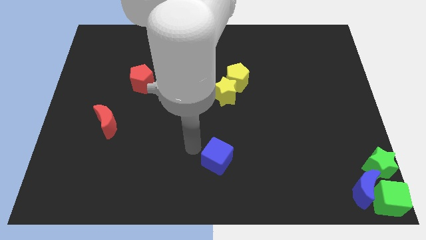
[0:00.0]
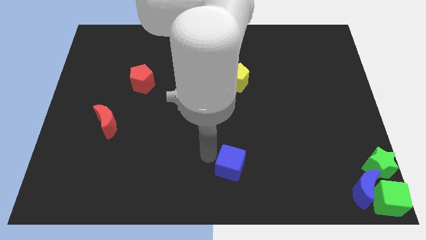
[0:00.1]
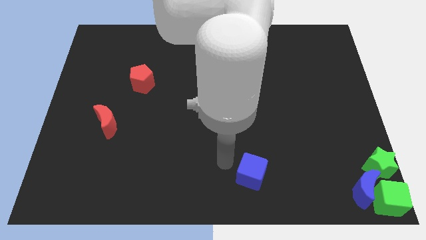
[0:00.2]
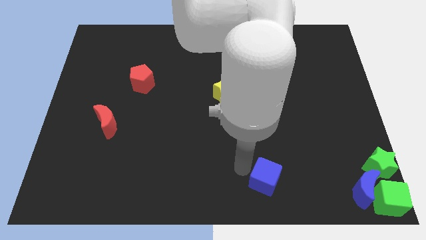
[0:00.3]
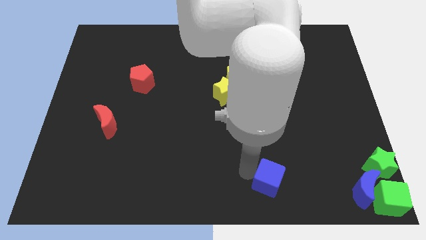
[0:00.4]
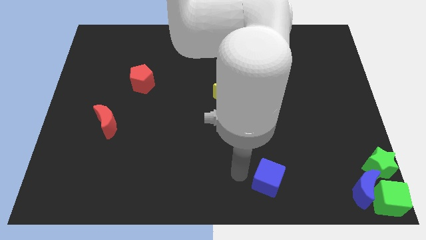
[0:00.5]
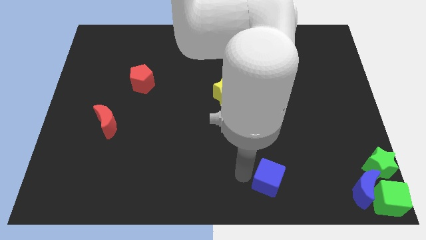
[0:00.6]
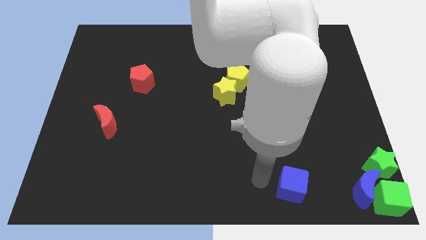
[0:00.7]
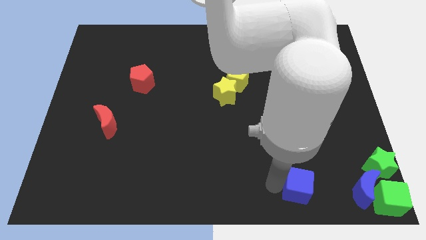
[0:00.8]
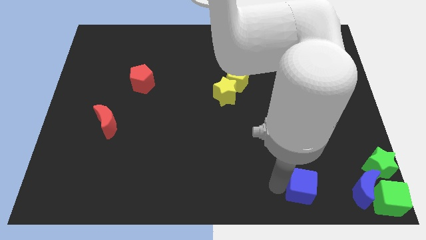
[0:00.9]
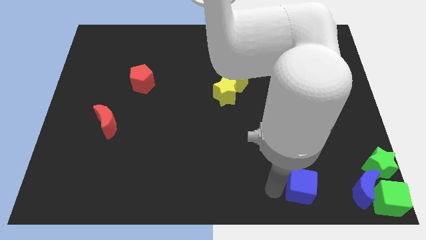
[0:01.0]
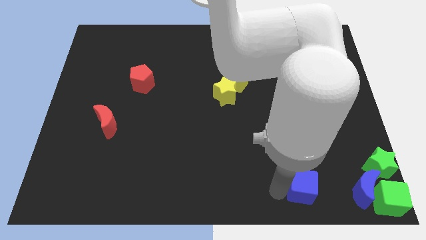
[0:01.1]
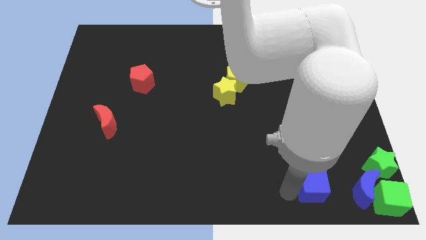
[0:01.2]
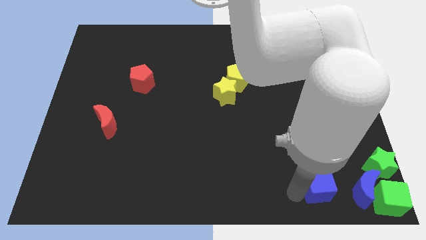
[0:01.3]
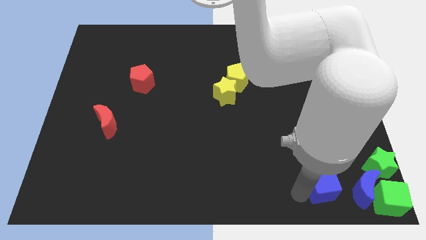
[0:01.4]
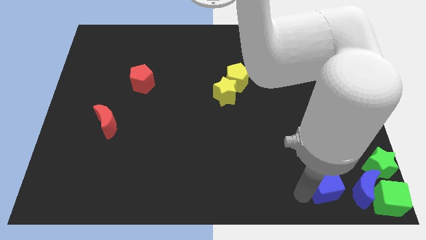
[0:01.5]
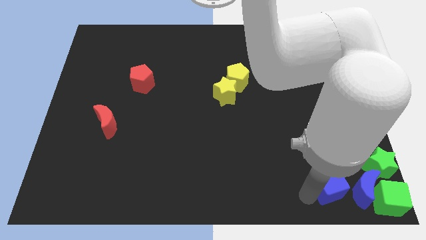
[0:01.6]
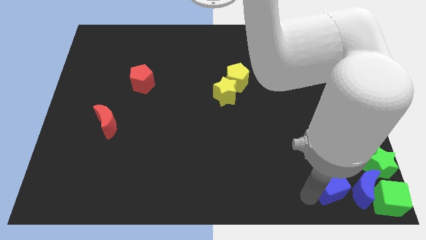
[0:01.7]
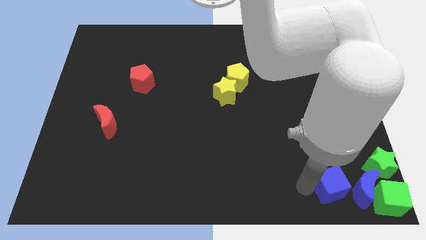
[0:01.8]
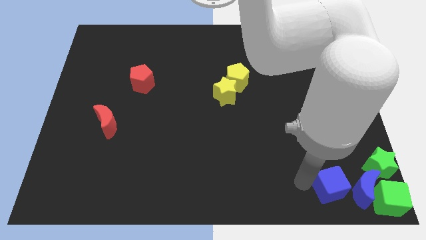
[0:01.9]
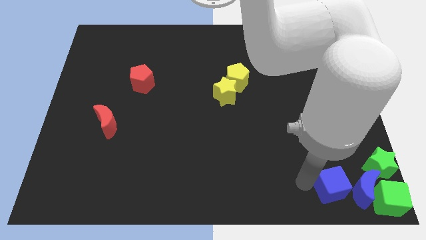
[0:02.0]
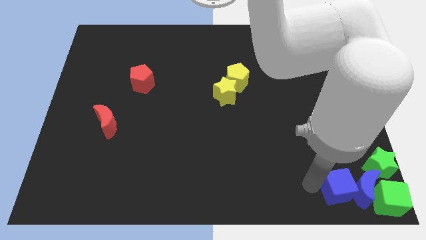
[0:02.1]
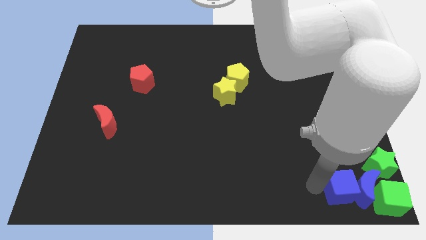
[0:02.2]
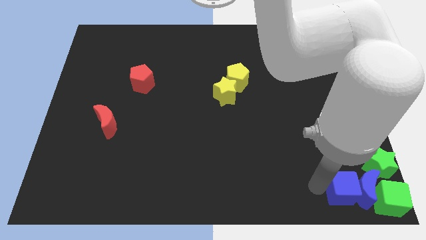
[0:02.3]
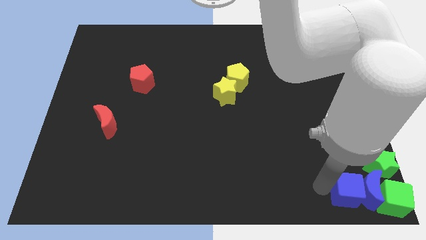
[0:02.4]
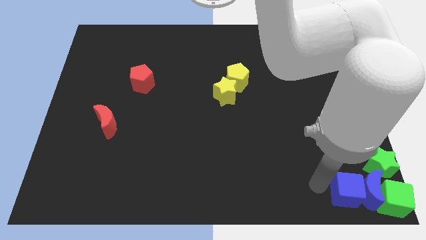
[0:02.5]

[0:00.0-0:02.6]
push the blue cube towards the half blue moon

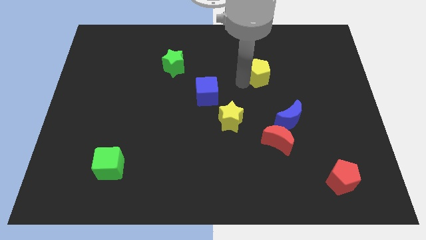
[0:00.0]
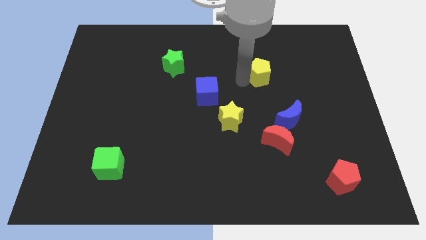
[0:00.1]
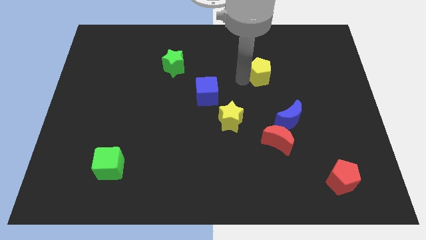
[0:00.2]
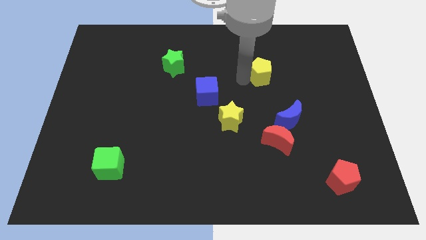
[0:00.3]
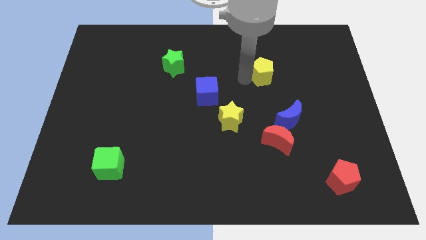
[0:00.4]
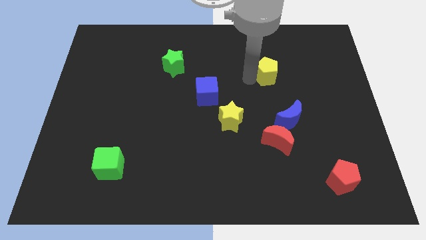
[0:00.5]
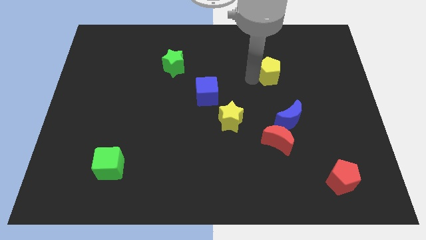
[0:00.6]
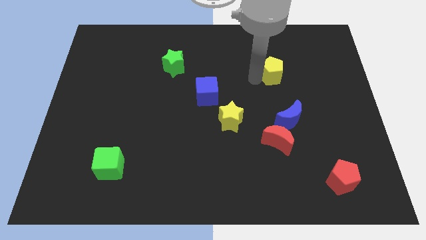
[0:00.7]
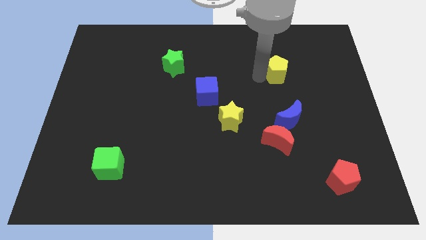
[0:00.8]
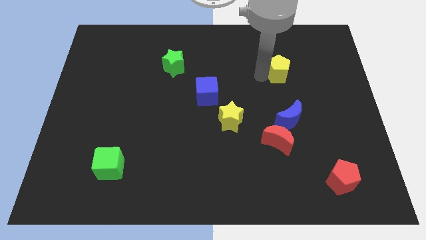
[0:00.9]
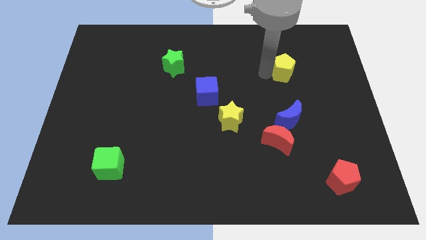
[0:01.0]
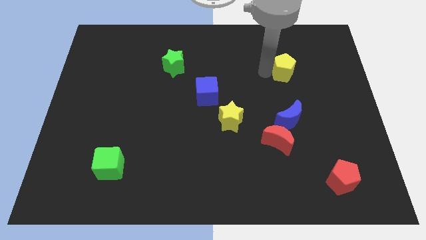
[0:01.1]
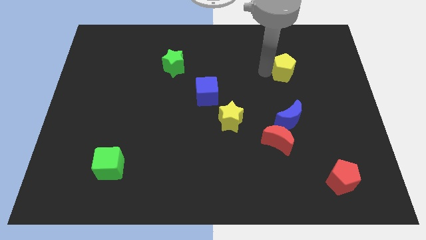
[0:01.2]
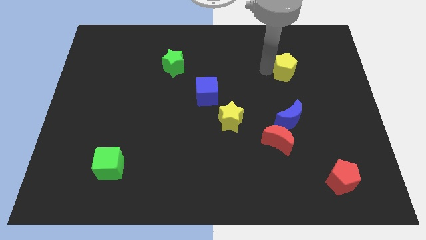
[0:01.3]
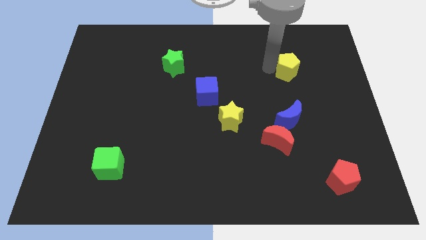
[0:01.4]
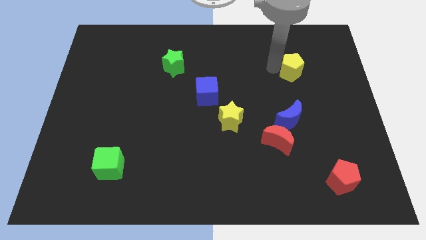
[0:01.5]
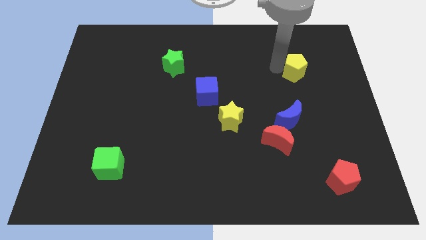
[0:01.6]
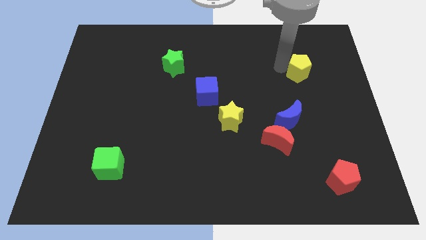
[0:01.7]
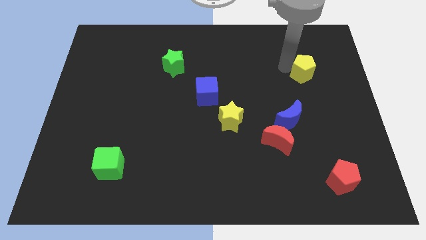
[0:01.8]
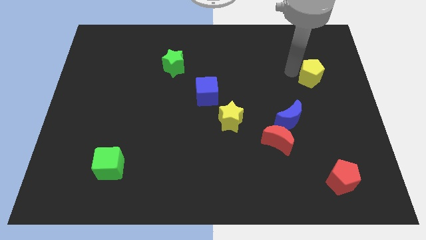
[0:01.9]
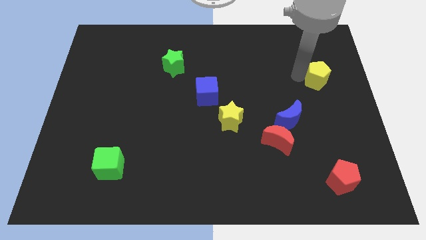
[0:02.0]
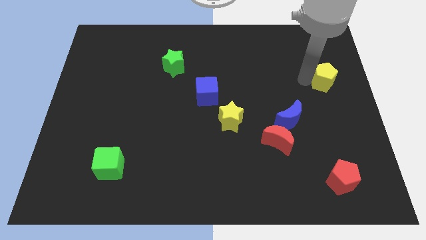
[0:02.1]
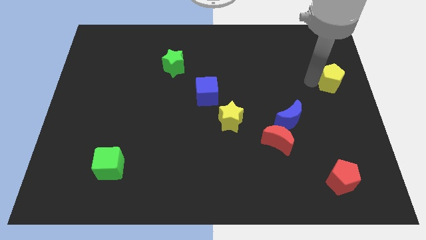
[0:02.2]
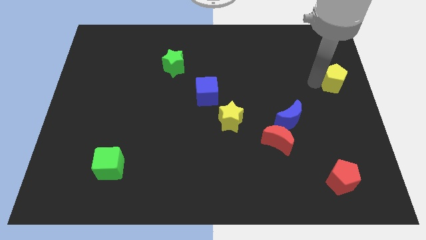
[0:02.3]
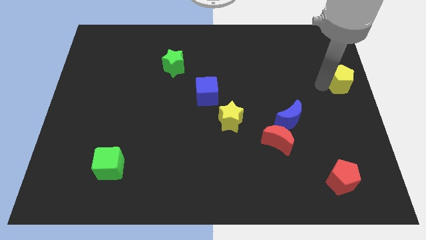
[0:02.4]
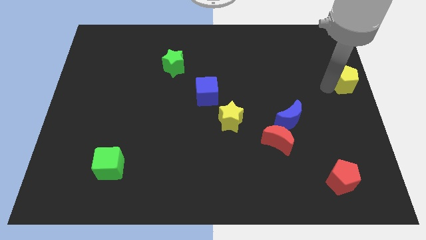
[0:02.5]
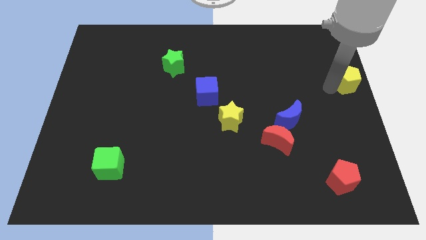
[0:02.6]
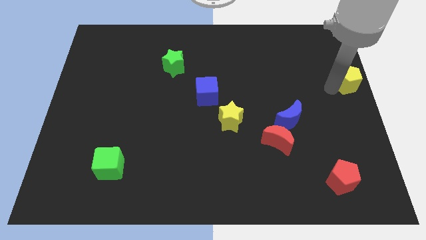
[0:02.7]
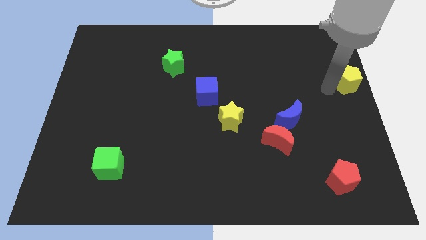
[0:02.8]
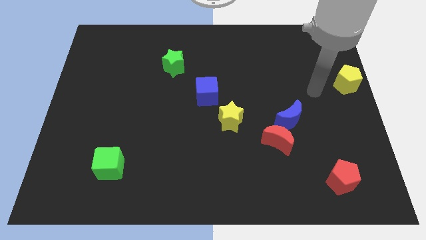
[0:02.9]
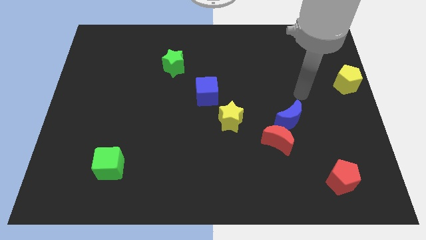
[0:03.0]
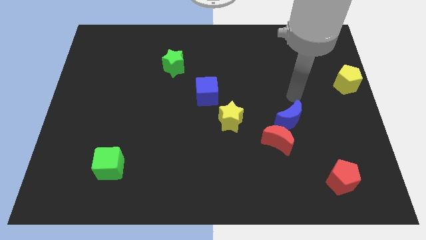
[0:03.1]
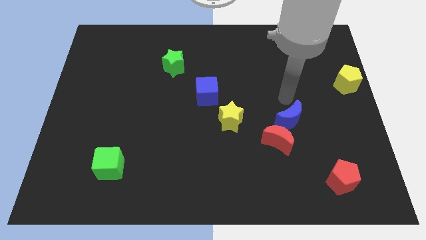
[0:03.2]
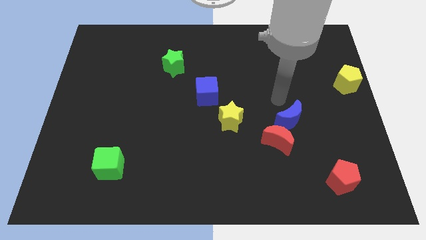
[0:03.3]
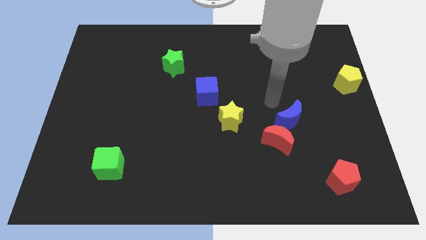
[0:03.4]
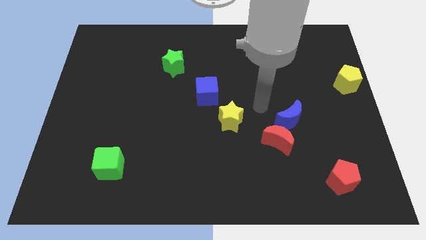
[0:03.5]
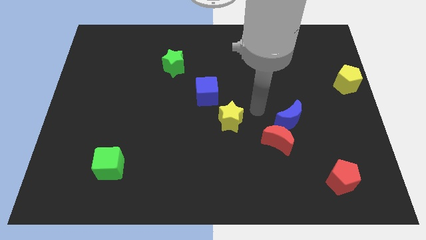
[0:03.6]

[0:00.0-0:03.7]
push the yellow pentagon to the right center of the board

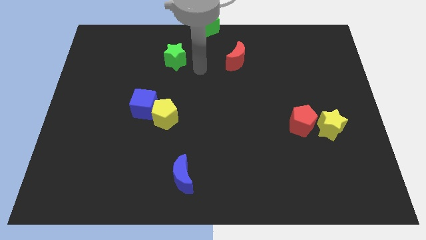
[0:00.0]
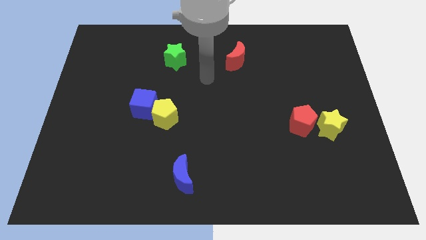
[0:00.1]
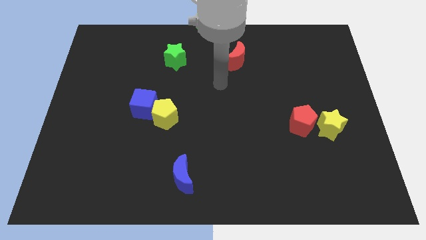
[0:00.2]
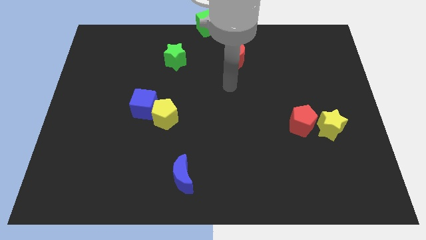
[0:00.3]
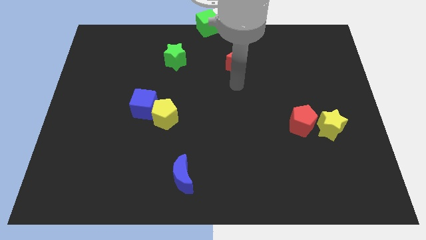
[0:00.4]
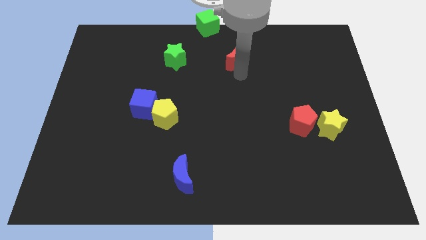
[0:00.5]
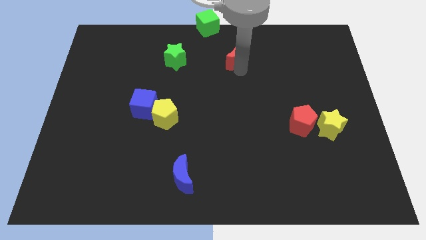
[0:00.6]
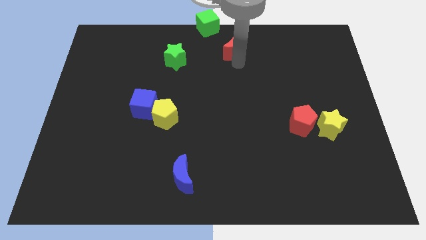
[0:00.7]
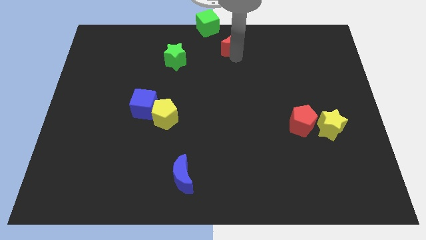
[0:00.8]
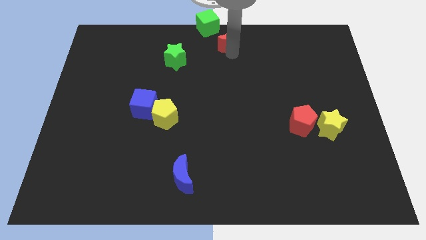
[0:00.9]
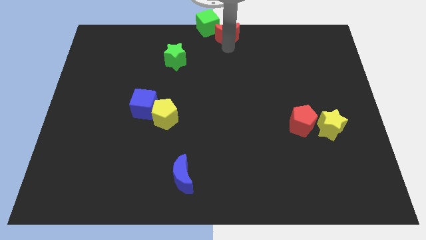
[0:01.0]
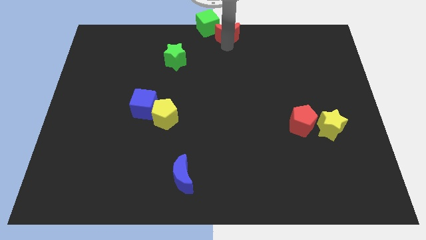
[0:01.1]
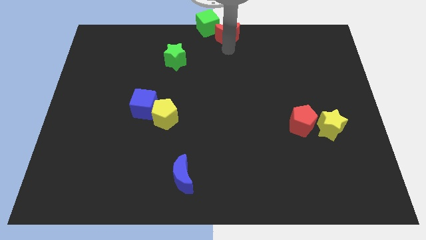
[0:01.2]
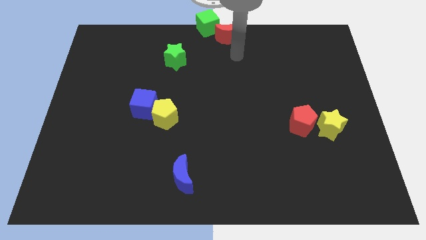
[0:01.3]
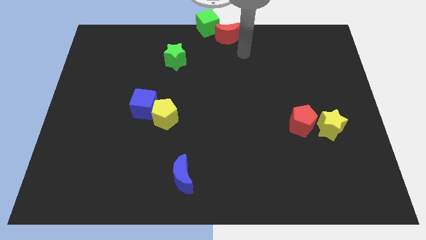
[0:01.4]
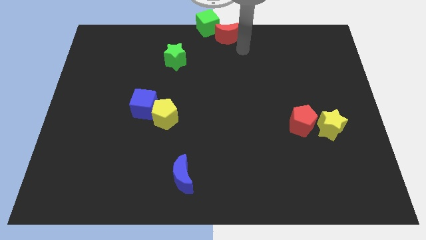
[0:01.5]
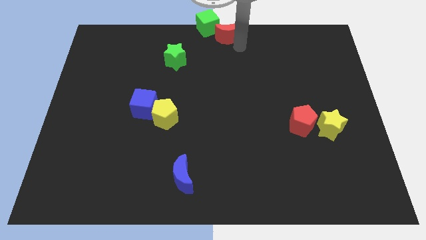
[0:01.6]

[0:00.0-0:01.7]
move the red moon into the green cube

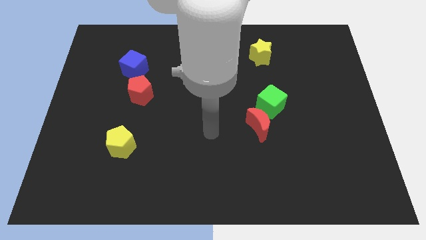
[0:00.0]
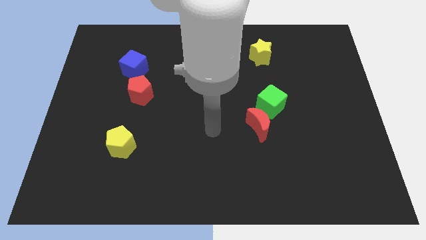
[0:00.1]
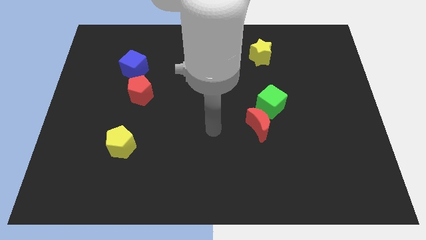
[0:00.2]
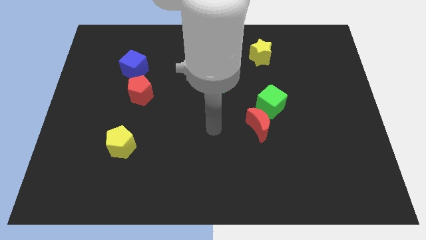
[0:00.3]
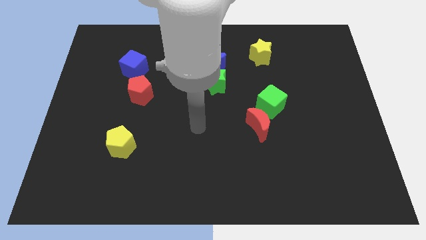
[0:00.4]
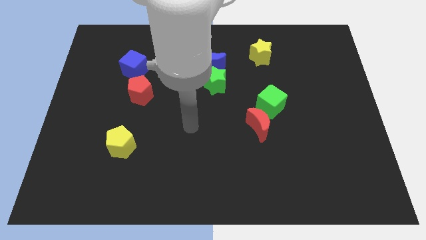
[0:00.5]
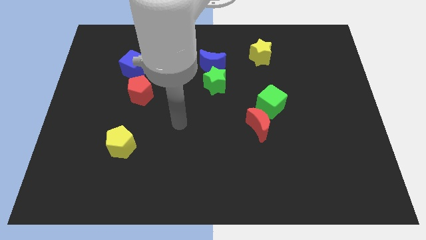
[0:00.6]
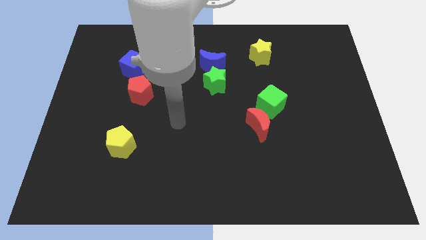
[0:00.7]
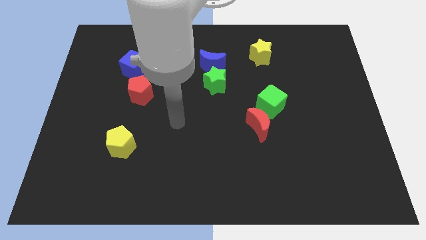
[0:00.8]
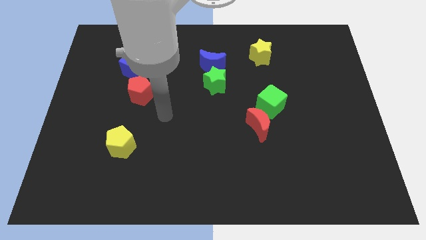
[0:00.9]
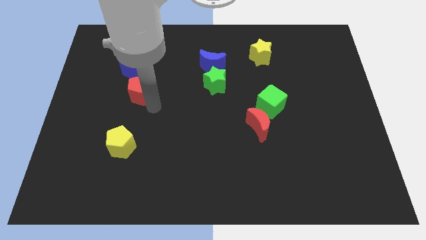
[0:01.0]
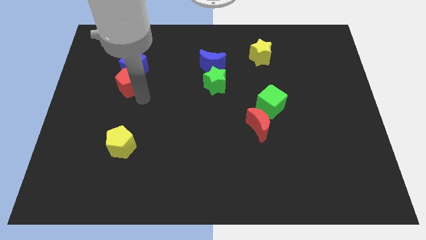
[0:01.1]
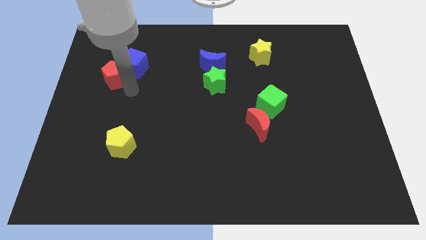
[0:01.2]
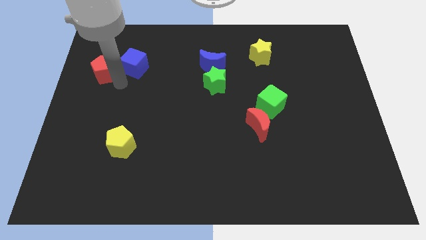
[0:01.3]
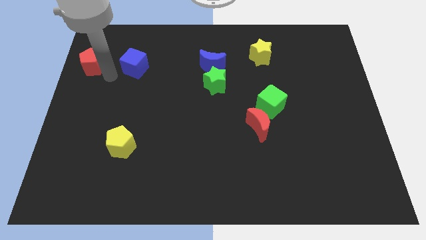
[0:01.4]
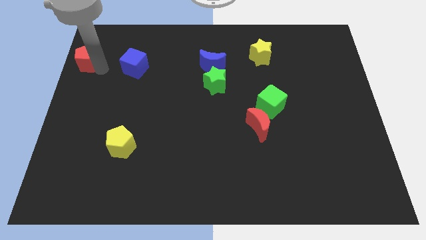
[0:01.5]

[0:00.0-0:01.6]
move the red pentagon to the left of blue cube
